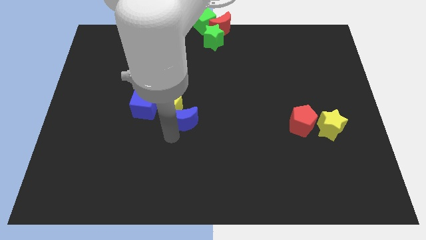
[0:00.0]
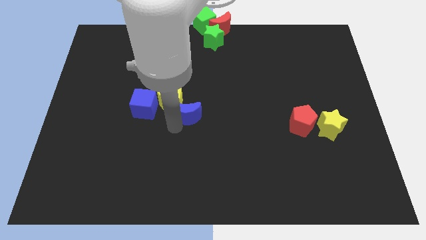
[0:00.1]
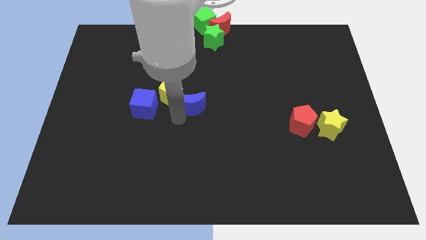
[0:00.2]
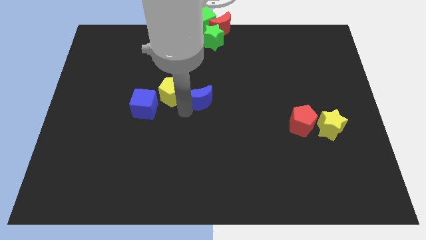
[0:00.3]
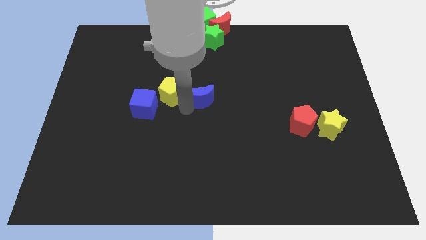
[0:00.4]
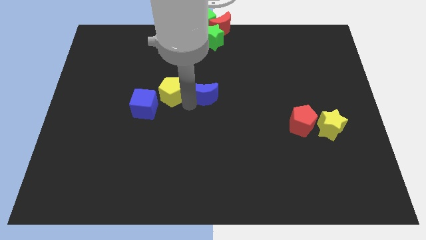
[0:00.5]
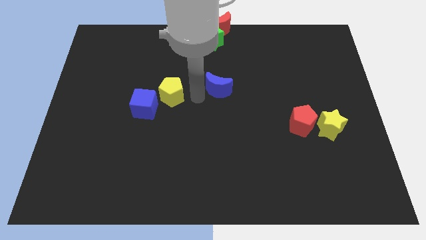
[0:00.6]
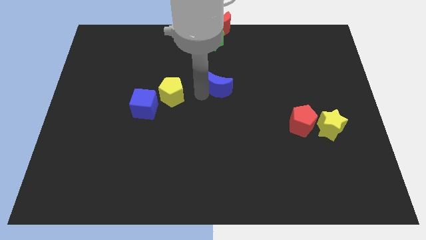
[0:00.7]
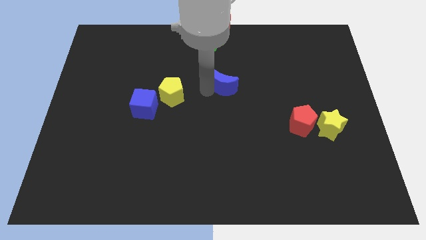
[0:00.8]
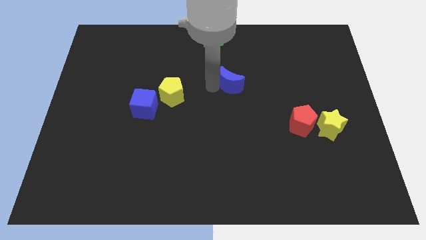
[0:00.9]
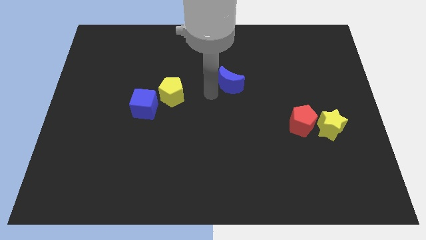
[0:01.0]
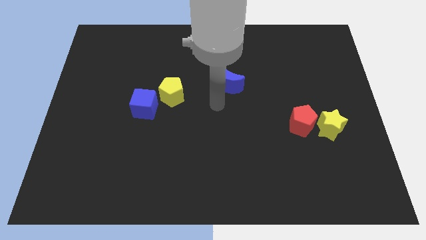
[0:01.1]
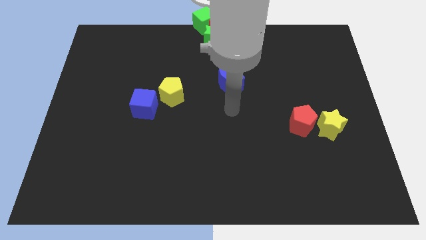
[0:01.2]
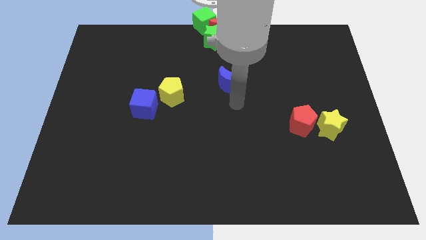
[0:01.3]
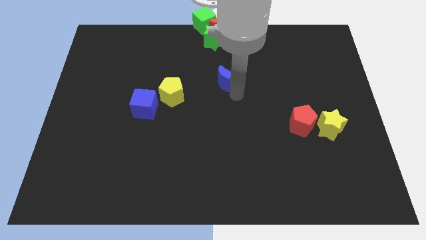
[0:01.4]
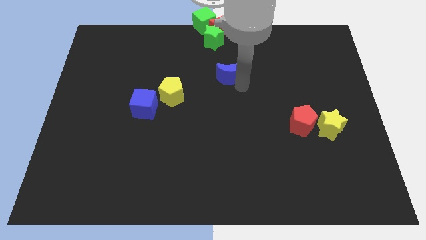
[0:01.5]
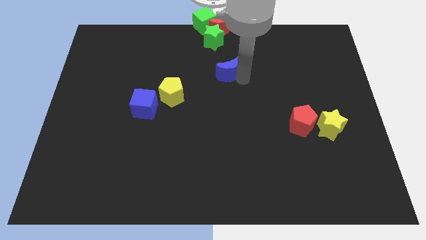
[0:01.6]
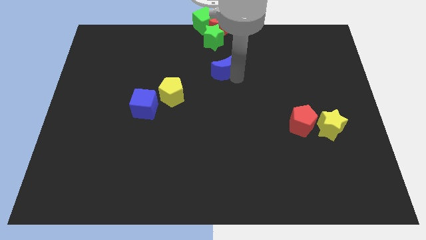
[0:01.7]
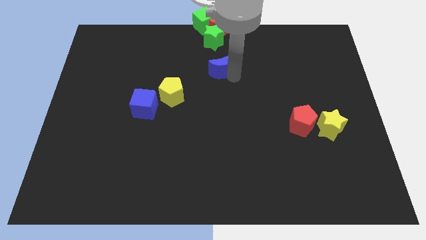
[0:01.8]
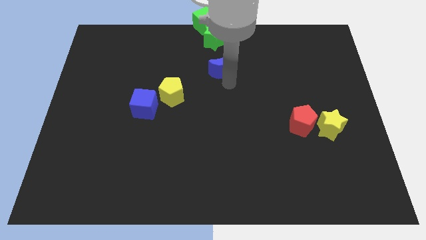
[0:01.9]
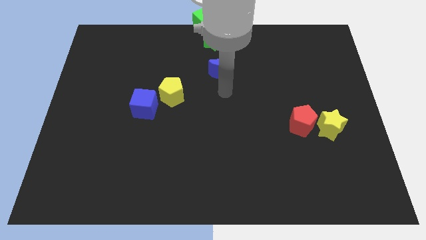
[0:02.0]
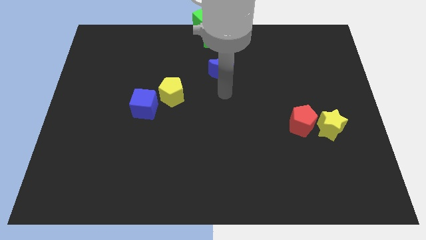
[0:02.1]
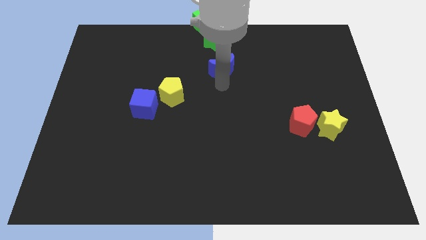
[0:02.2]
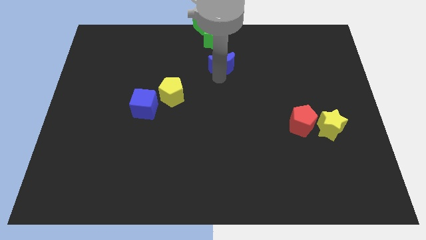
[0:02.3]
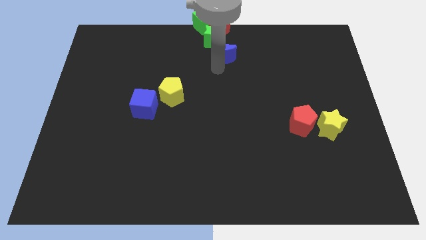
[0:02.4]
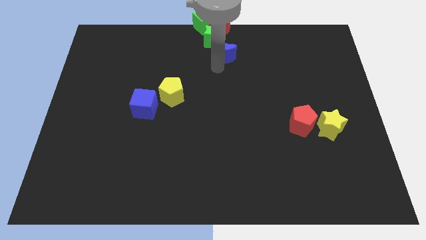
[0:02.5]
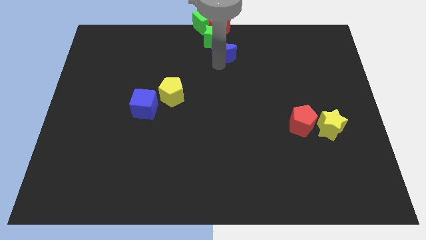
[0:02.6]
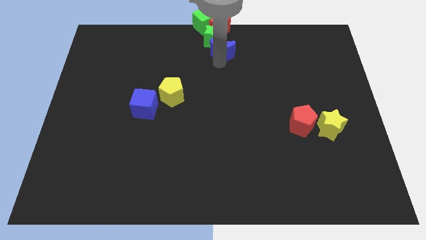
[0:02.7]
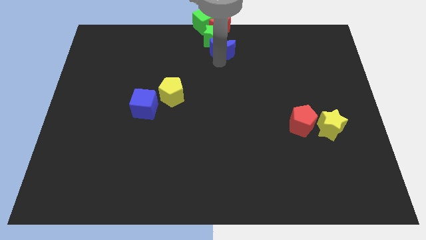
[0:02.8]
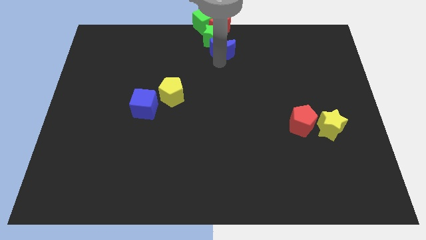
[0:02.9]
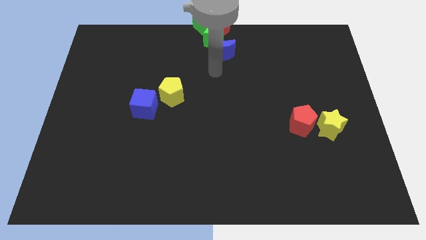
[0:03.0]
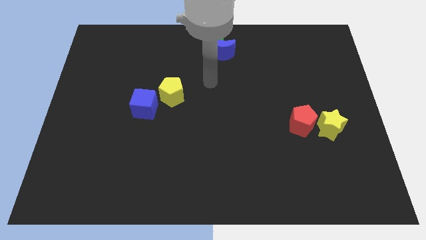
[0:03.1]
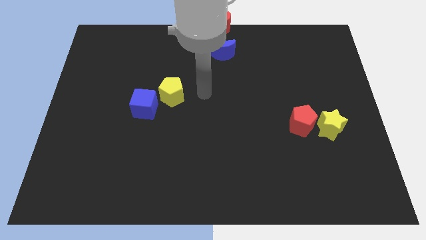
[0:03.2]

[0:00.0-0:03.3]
place the blue crescent at the bottom of the green star

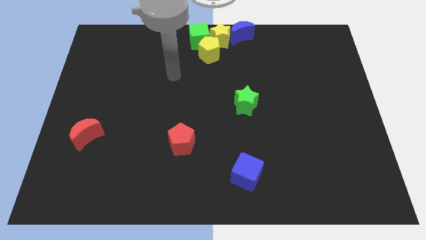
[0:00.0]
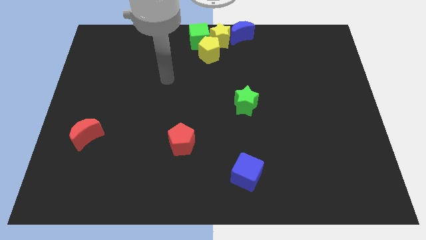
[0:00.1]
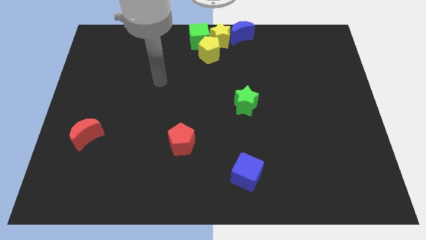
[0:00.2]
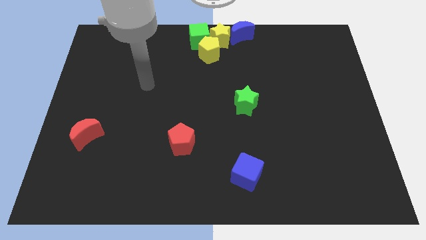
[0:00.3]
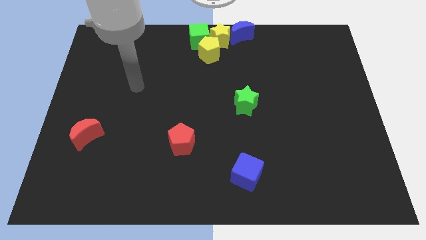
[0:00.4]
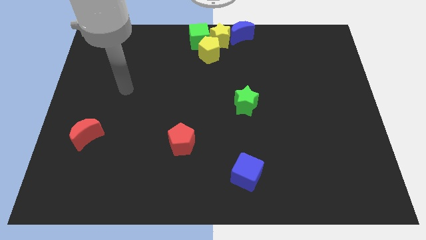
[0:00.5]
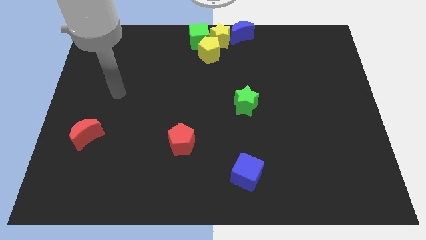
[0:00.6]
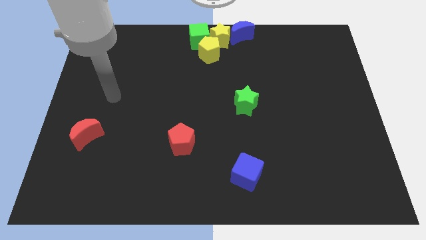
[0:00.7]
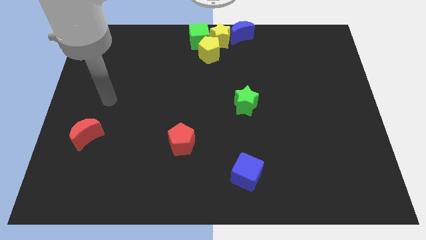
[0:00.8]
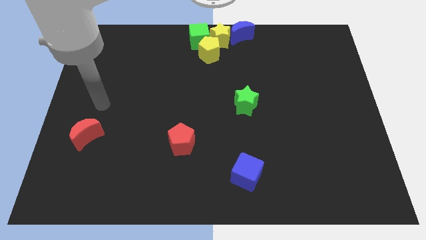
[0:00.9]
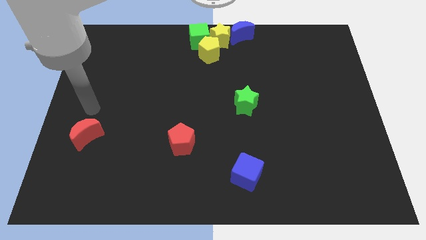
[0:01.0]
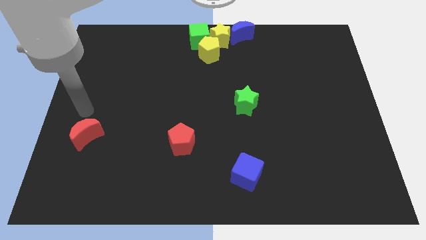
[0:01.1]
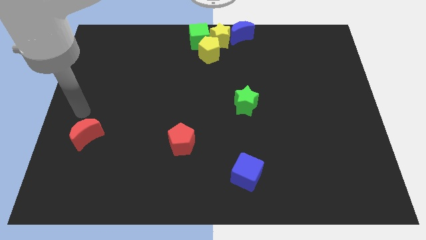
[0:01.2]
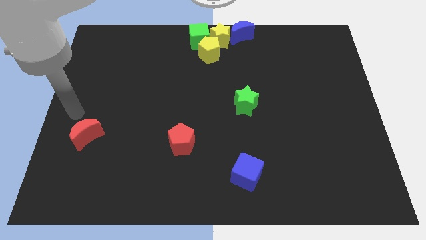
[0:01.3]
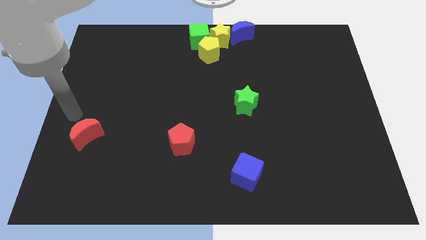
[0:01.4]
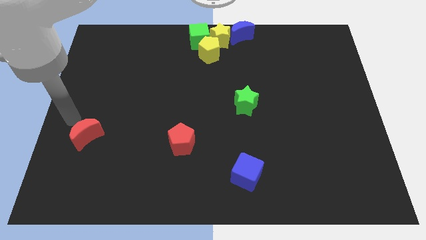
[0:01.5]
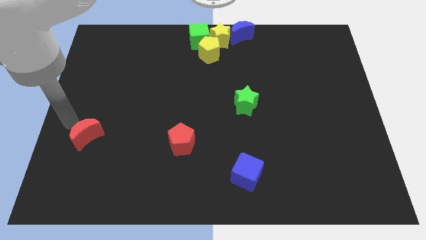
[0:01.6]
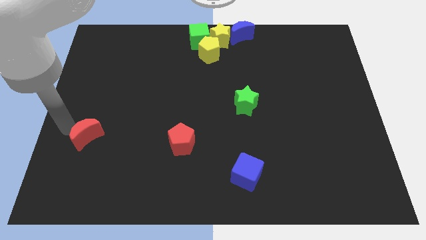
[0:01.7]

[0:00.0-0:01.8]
point your arm close to red moon

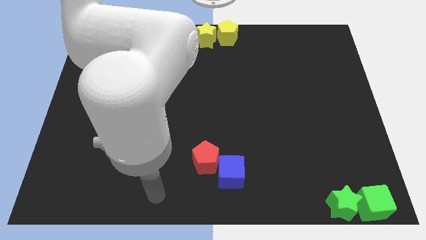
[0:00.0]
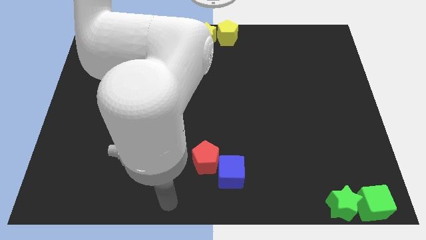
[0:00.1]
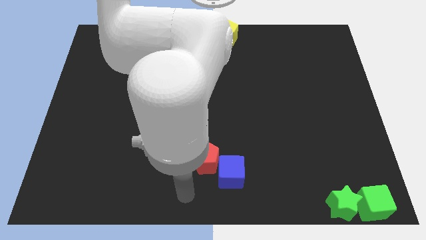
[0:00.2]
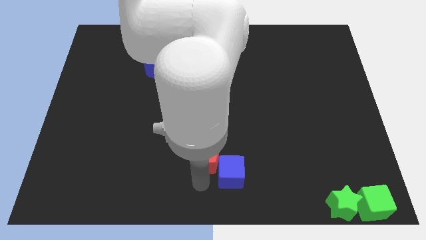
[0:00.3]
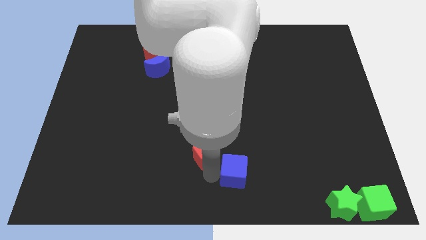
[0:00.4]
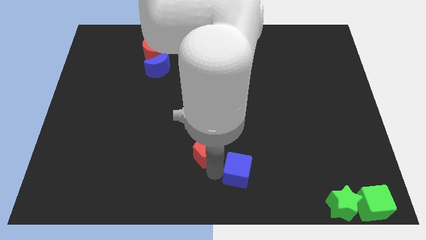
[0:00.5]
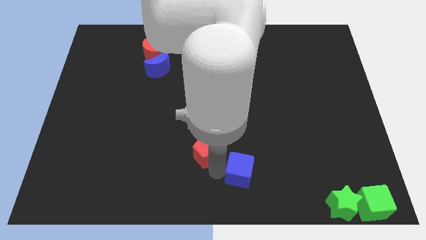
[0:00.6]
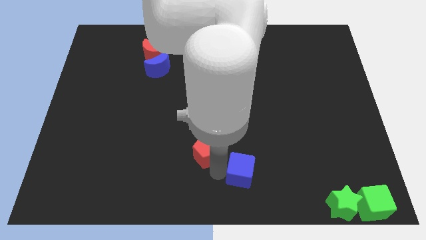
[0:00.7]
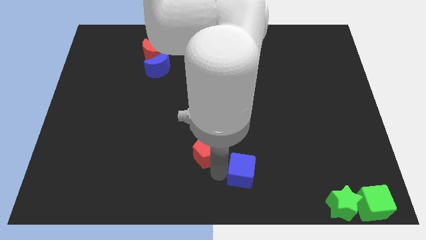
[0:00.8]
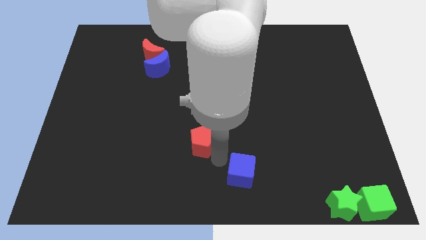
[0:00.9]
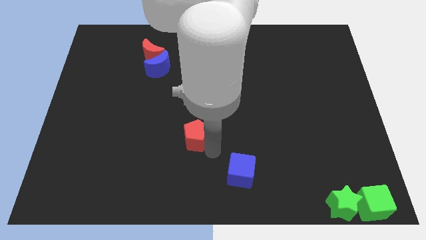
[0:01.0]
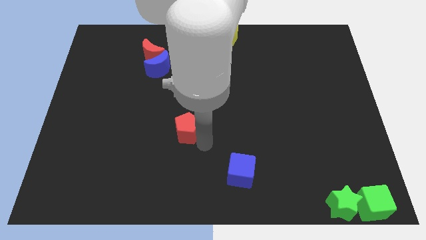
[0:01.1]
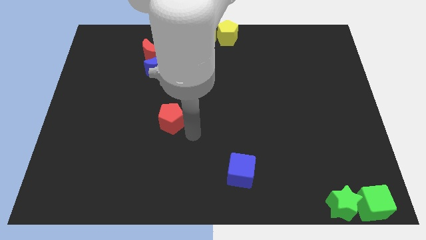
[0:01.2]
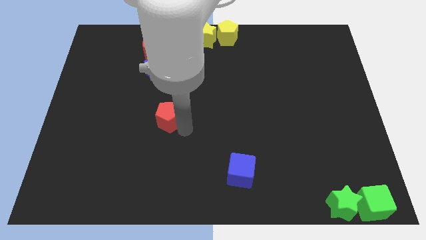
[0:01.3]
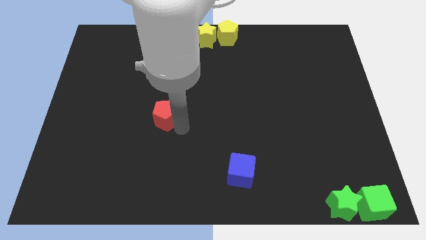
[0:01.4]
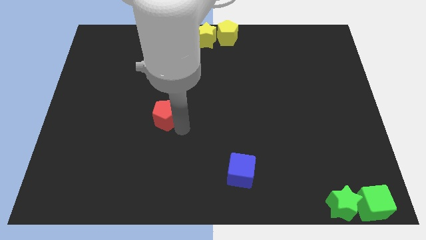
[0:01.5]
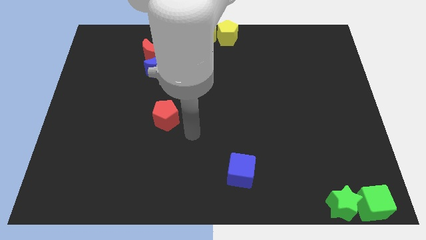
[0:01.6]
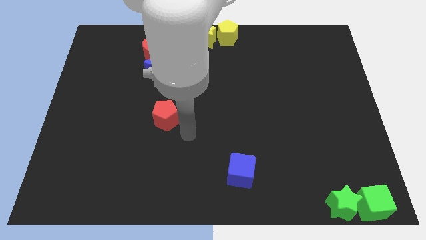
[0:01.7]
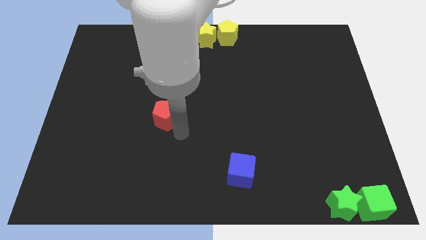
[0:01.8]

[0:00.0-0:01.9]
put the red pentagon vertically below the blue moon

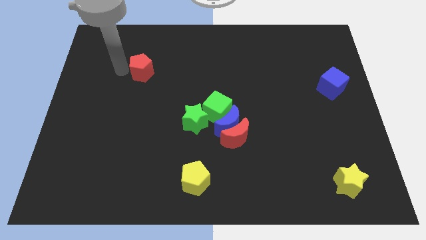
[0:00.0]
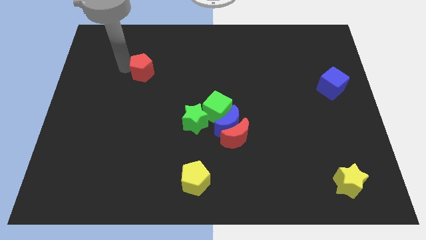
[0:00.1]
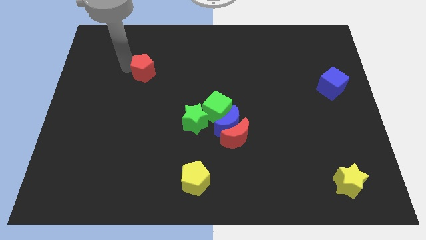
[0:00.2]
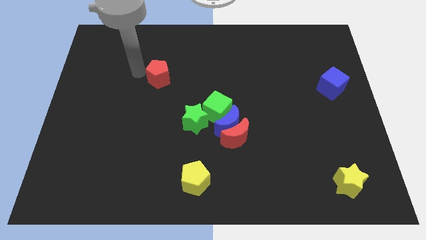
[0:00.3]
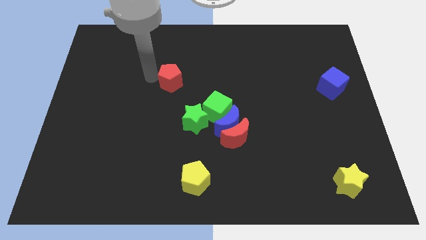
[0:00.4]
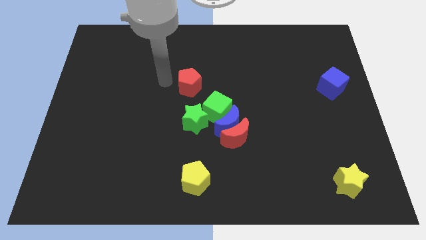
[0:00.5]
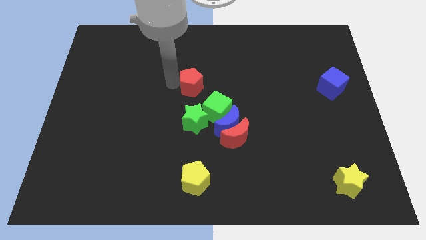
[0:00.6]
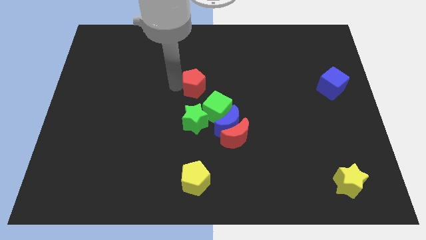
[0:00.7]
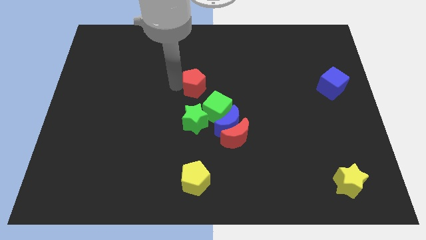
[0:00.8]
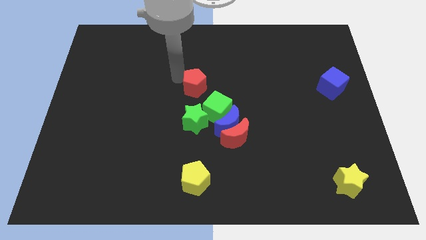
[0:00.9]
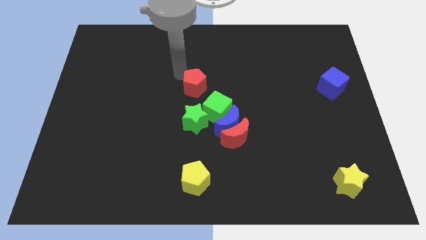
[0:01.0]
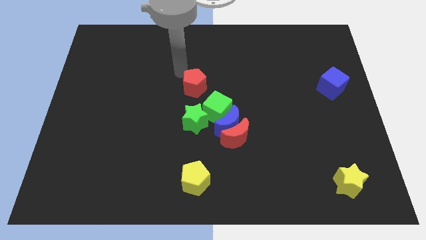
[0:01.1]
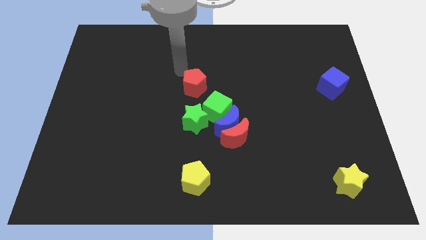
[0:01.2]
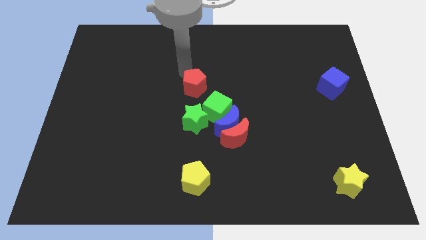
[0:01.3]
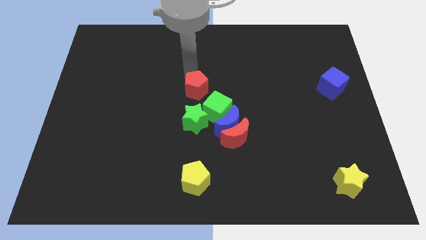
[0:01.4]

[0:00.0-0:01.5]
move the red pentagon towards green blocks

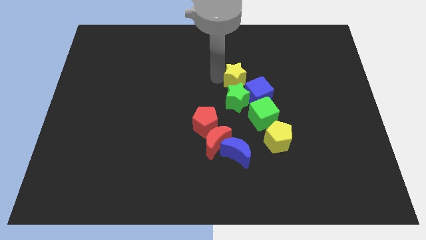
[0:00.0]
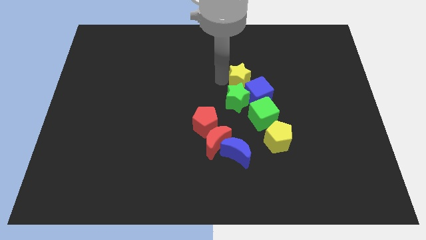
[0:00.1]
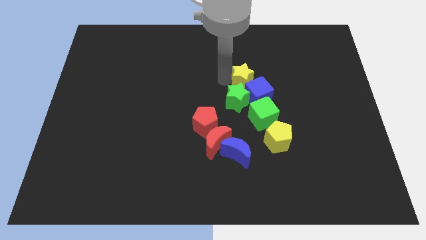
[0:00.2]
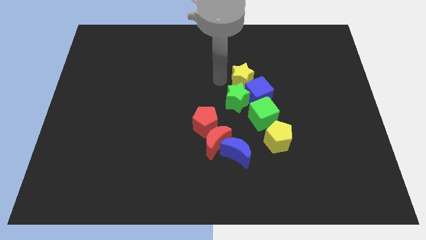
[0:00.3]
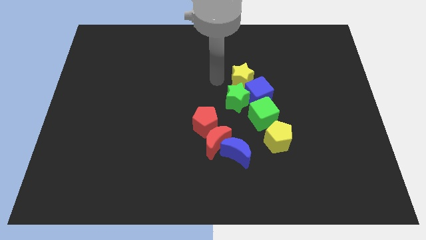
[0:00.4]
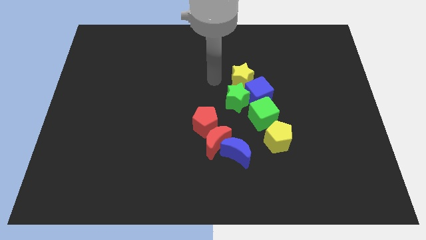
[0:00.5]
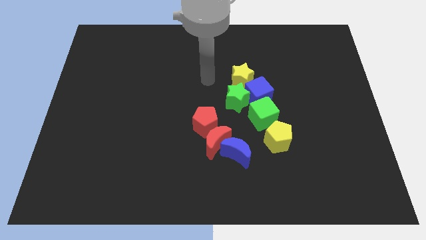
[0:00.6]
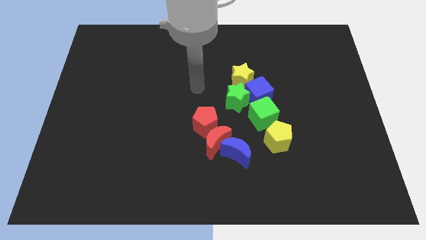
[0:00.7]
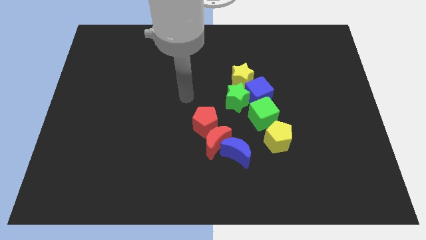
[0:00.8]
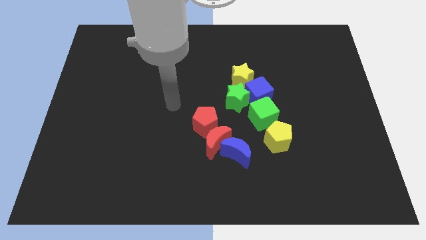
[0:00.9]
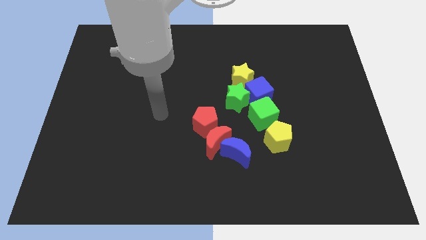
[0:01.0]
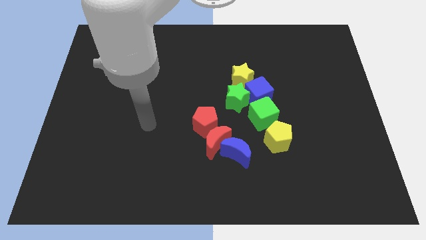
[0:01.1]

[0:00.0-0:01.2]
place the yellow star on top of blue cube
